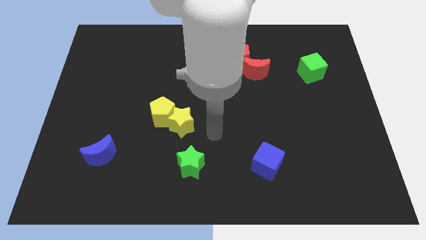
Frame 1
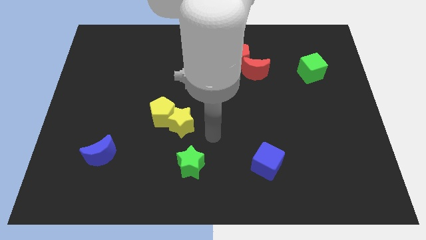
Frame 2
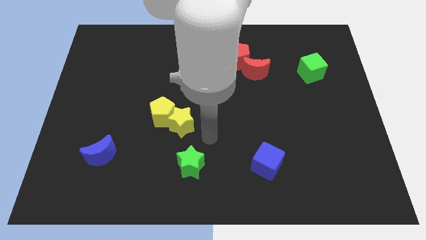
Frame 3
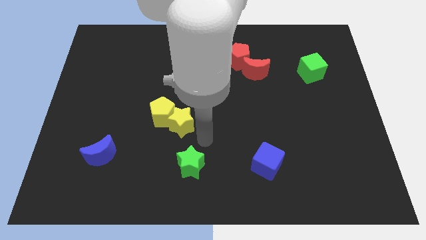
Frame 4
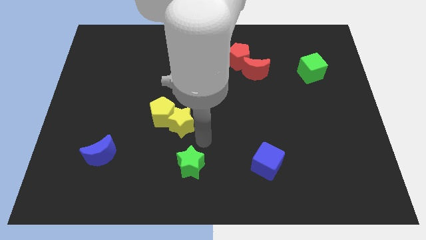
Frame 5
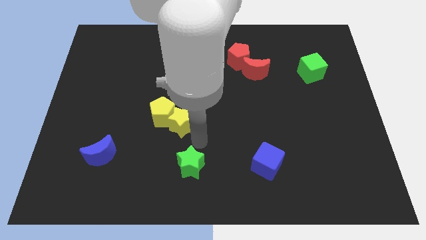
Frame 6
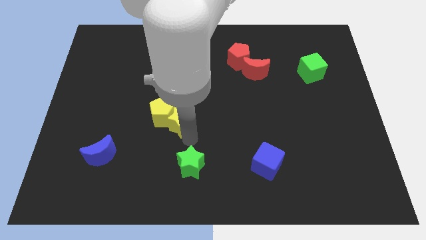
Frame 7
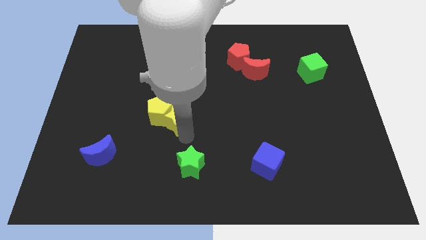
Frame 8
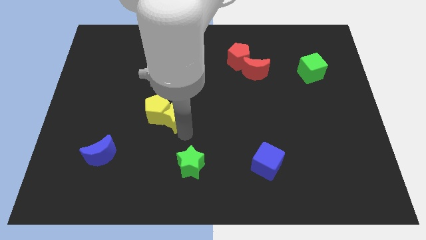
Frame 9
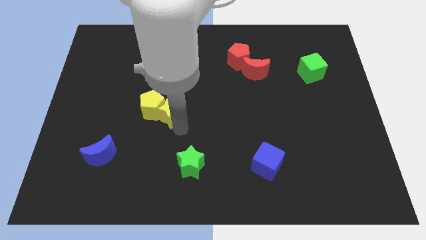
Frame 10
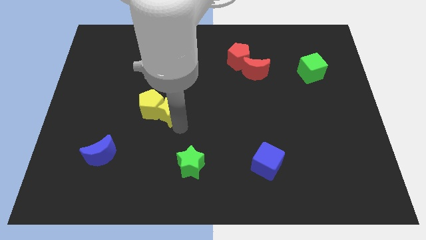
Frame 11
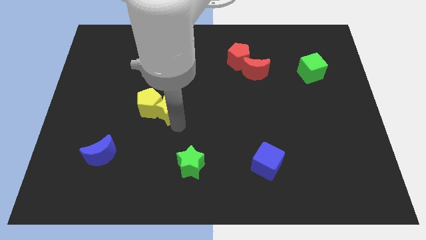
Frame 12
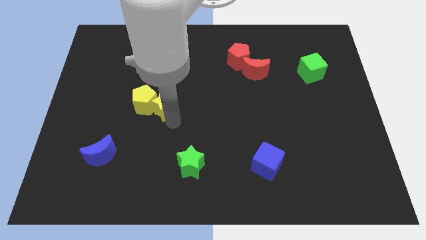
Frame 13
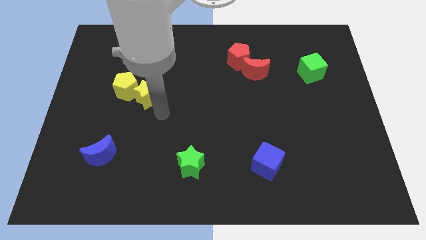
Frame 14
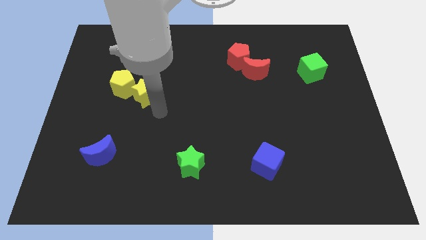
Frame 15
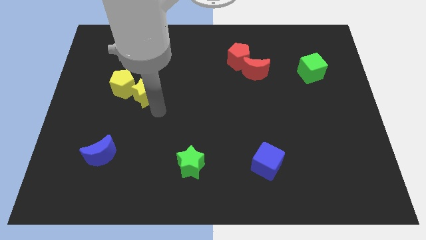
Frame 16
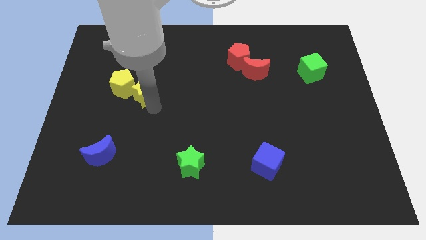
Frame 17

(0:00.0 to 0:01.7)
move the yellow blocks towards the top left side

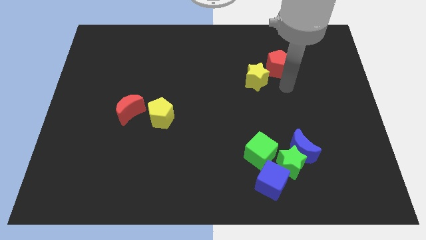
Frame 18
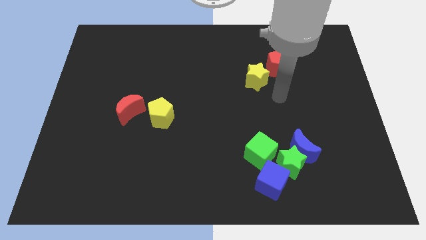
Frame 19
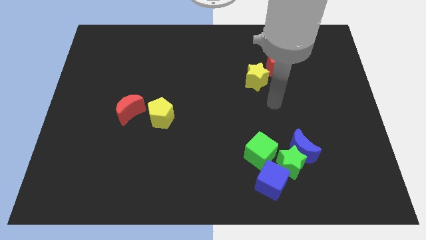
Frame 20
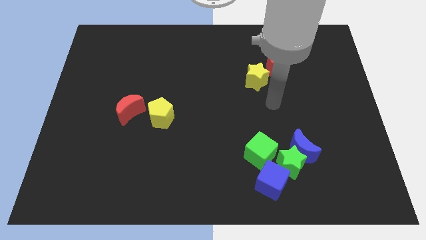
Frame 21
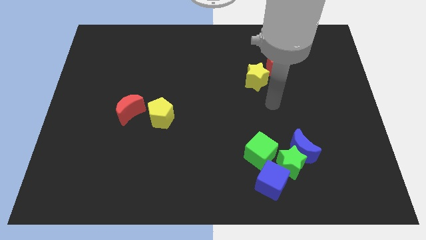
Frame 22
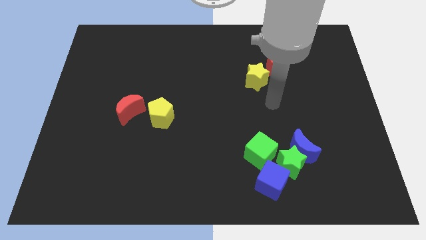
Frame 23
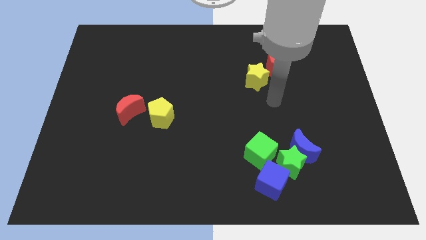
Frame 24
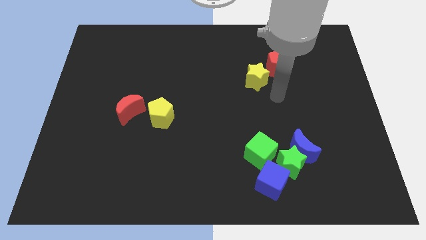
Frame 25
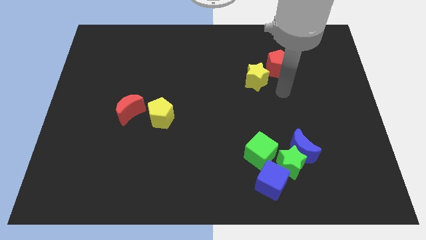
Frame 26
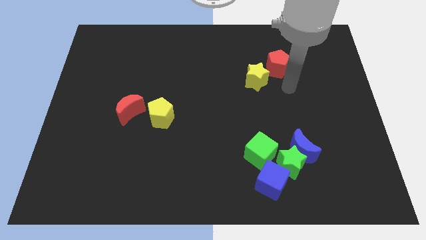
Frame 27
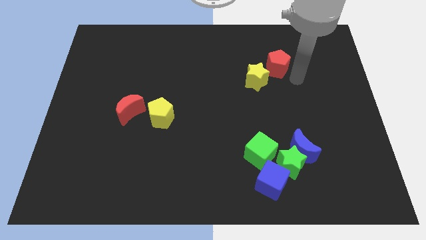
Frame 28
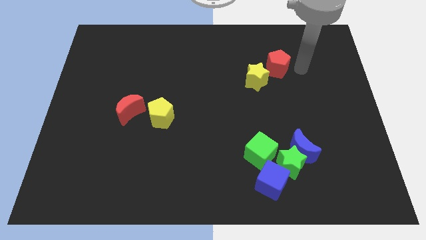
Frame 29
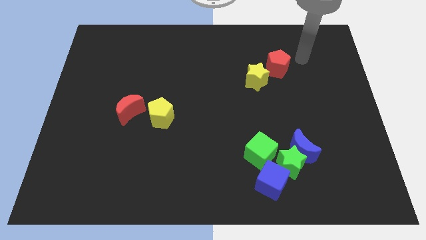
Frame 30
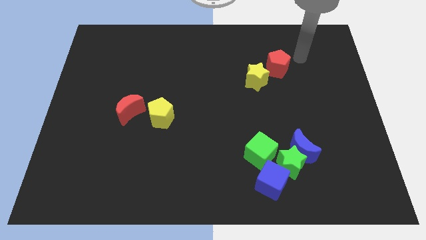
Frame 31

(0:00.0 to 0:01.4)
move the arm away from the red pentagon

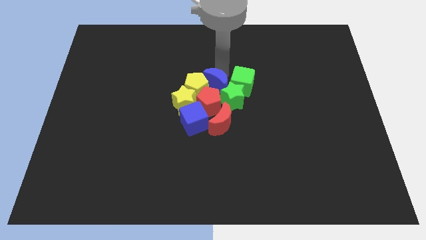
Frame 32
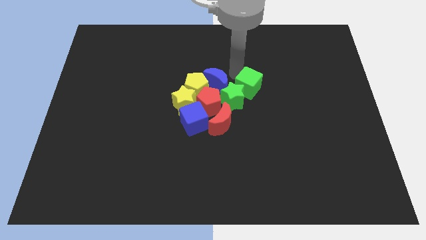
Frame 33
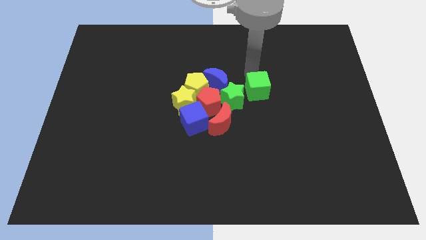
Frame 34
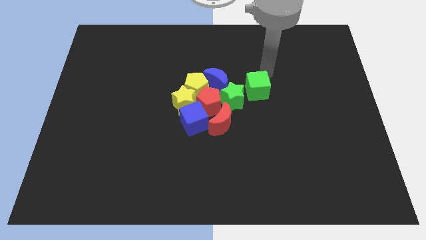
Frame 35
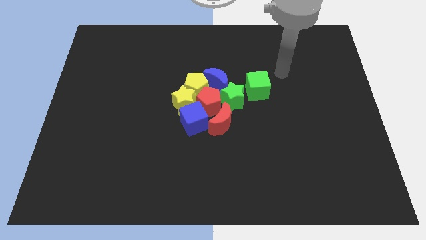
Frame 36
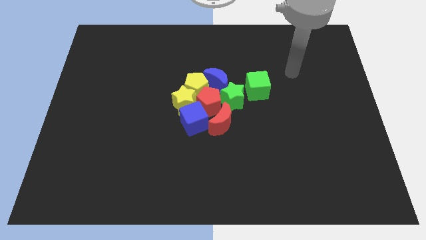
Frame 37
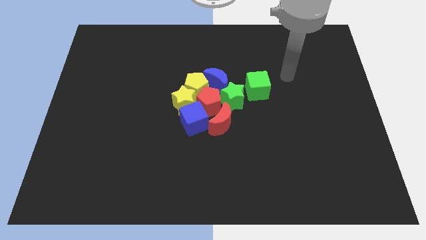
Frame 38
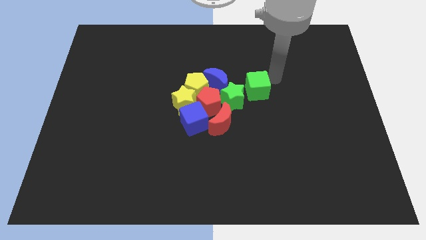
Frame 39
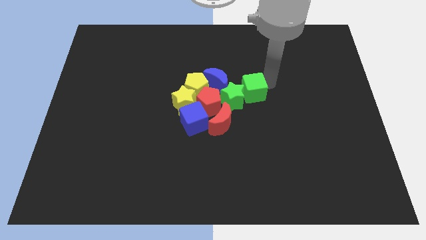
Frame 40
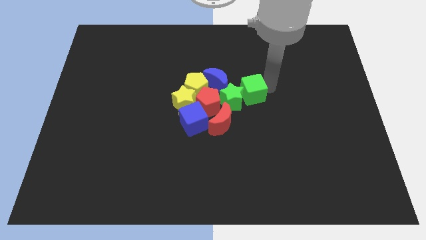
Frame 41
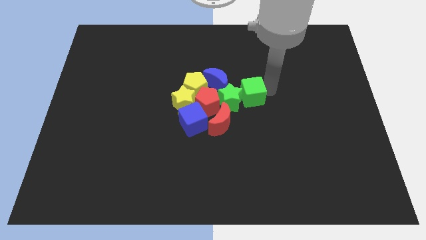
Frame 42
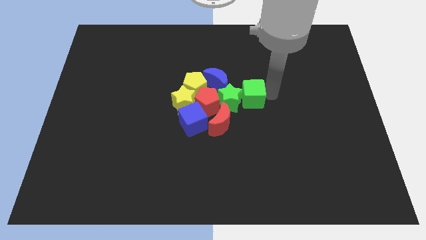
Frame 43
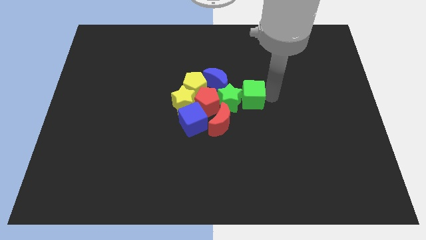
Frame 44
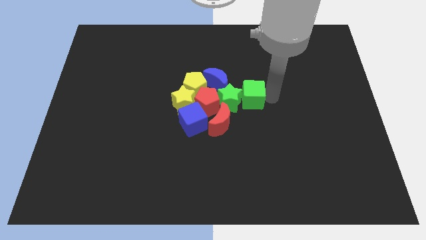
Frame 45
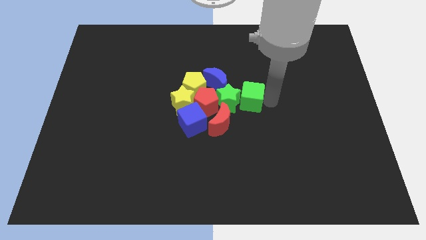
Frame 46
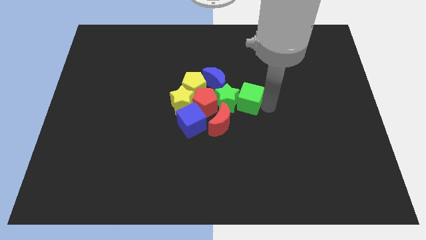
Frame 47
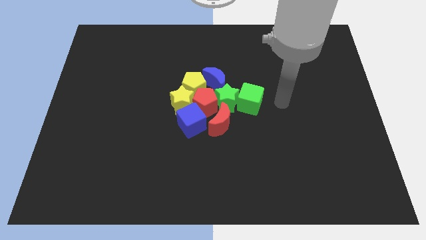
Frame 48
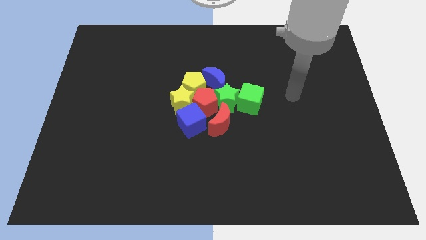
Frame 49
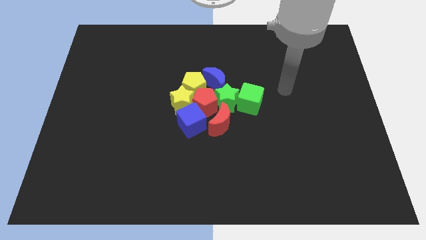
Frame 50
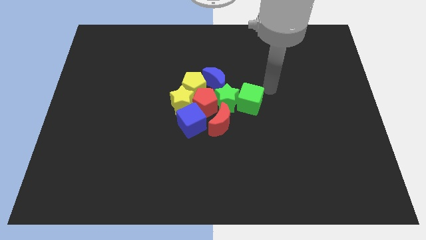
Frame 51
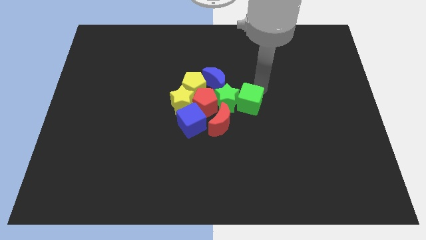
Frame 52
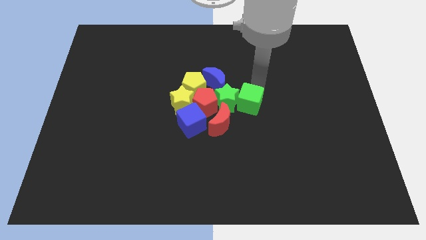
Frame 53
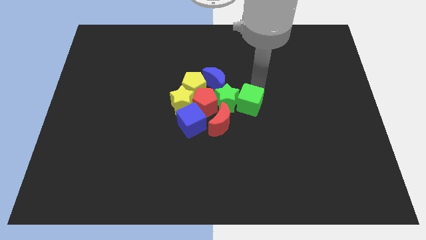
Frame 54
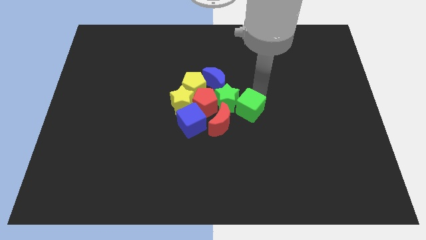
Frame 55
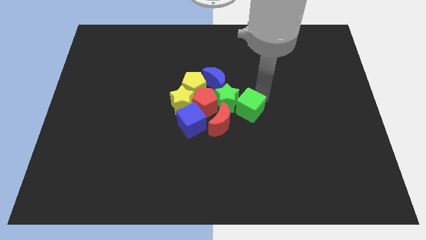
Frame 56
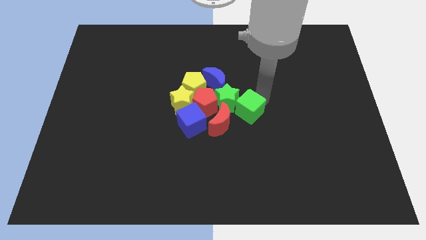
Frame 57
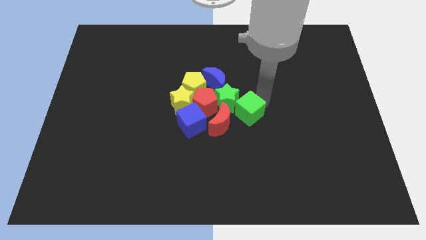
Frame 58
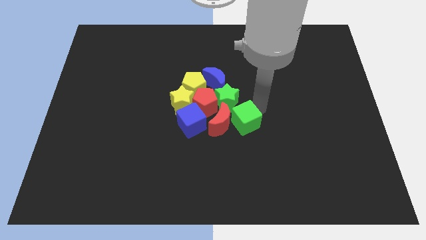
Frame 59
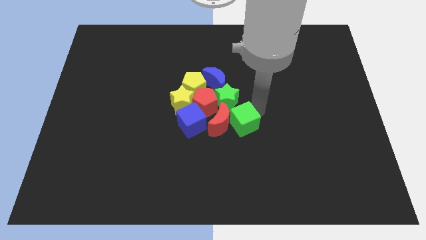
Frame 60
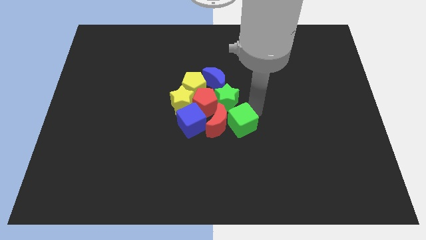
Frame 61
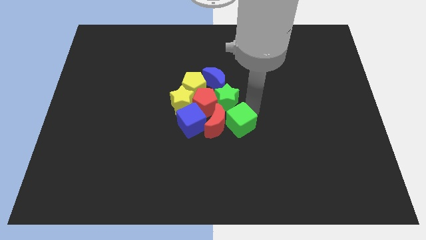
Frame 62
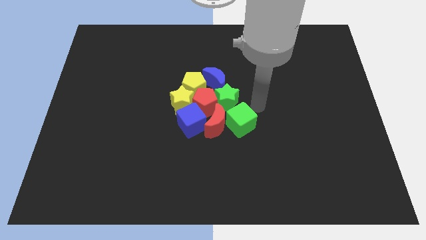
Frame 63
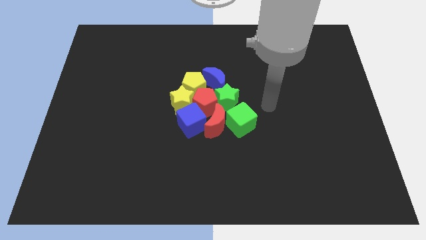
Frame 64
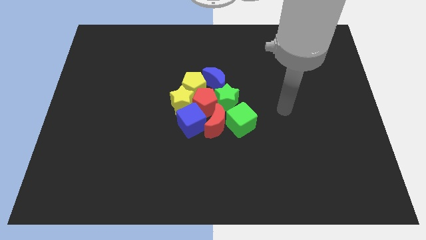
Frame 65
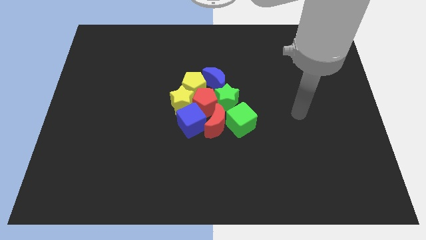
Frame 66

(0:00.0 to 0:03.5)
move the green cube to the right side of the red crescent

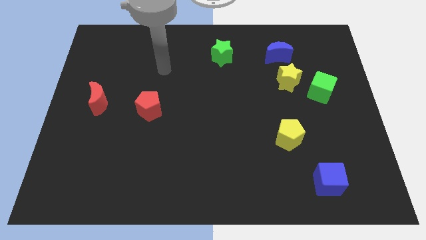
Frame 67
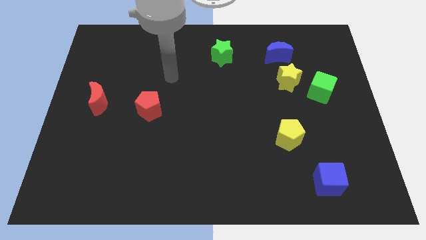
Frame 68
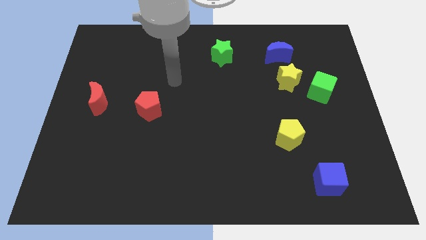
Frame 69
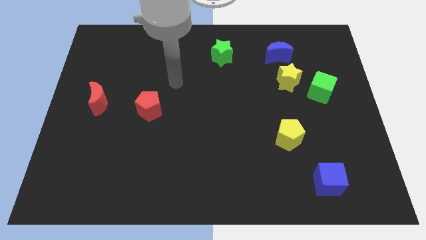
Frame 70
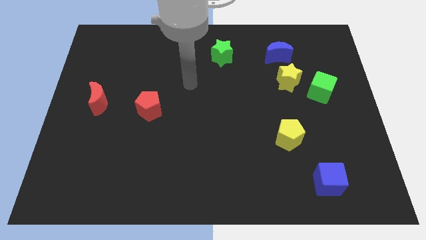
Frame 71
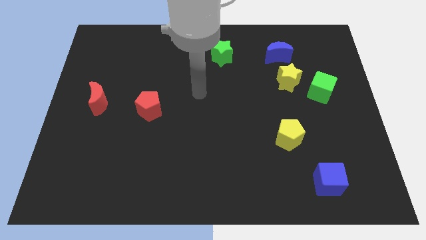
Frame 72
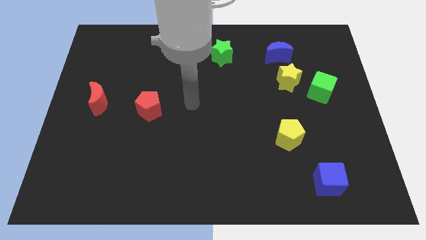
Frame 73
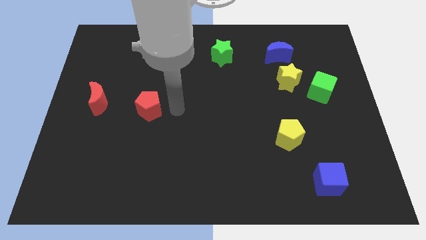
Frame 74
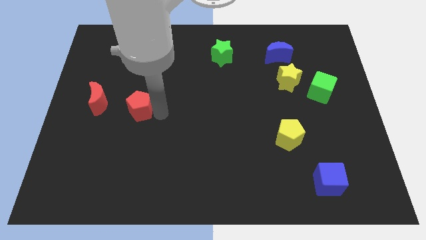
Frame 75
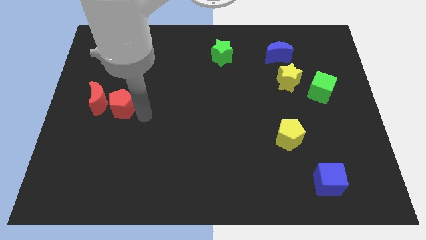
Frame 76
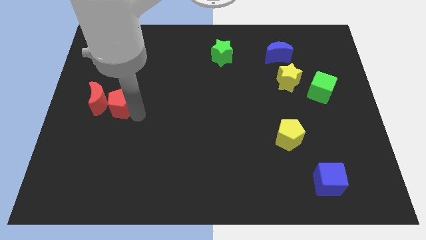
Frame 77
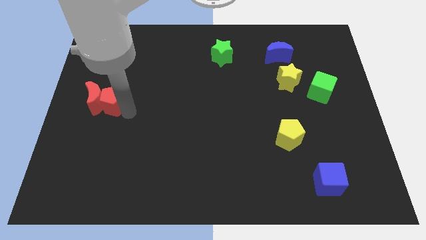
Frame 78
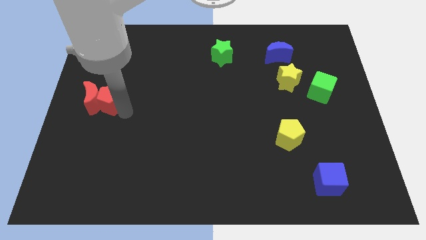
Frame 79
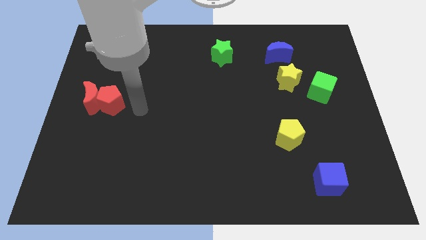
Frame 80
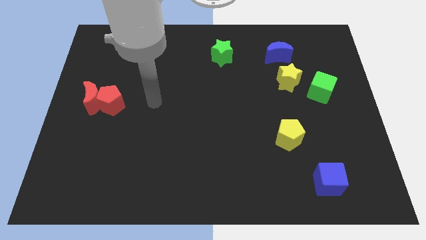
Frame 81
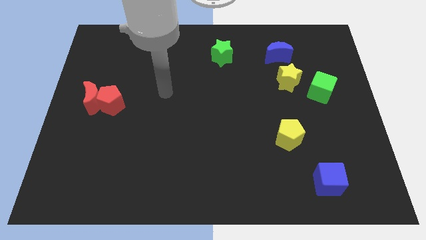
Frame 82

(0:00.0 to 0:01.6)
push the red pentagon into red crescent

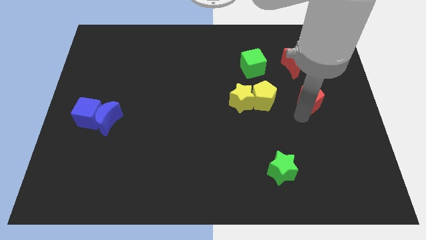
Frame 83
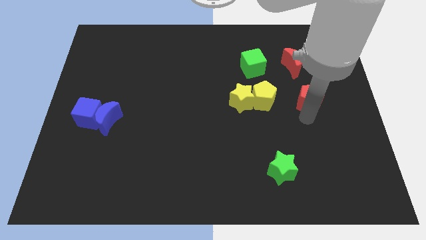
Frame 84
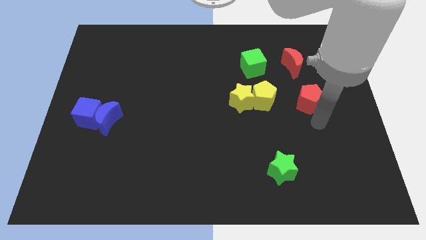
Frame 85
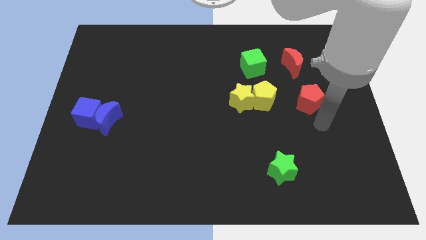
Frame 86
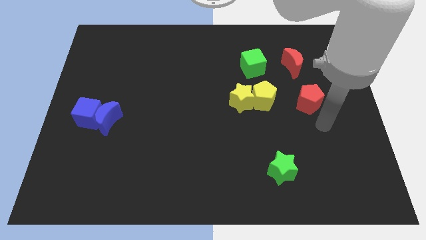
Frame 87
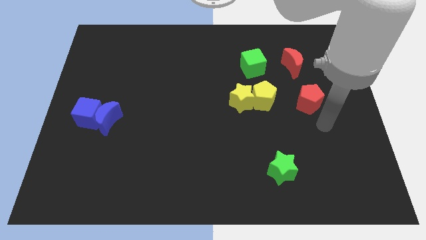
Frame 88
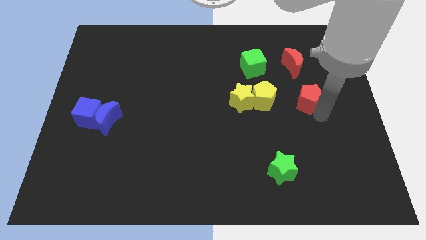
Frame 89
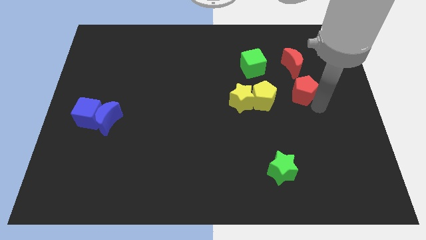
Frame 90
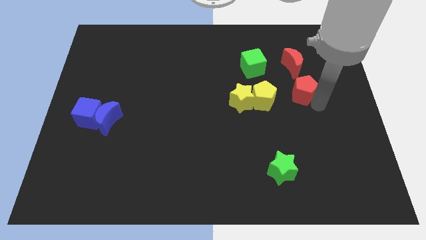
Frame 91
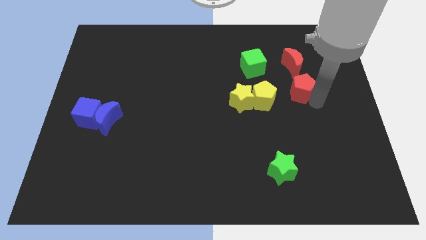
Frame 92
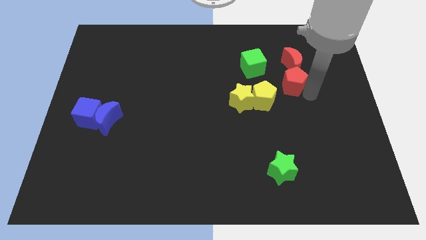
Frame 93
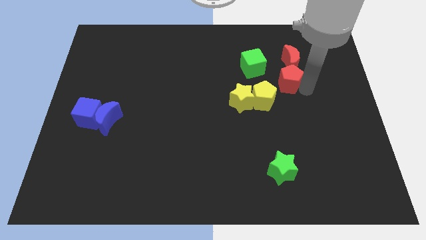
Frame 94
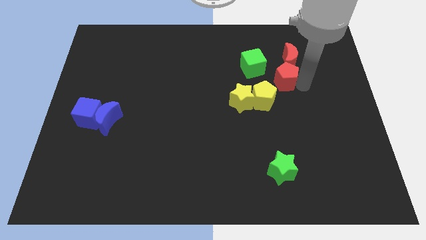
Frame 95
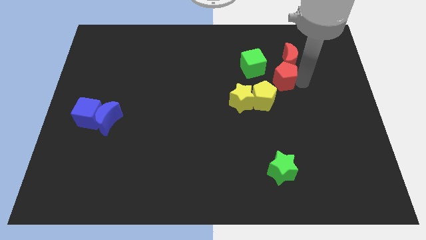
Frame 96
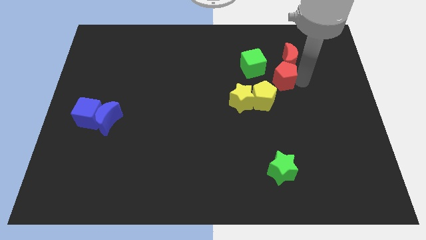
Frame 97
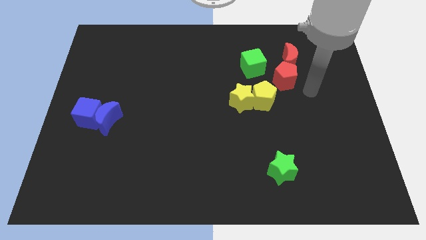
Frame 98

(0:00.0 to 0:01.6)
push the red pentagon into the red crescent
